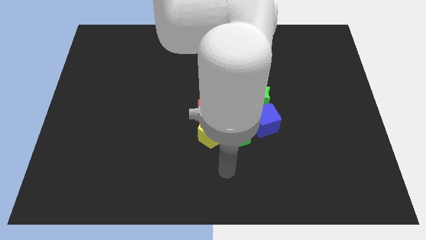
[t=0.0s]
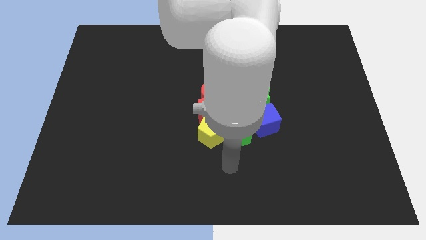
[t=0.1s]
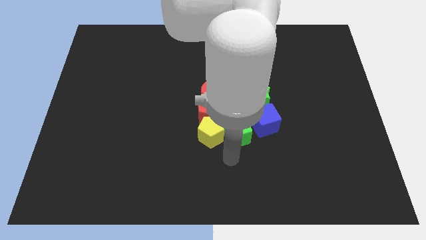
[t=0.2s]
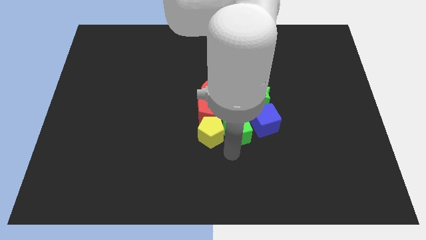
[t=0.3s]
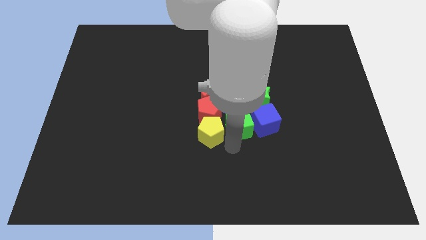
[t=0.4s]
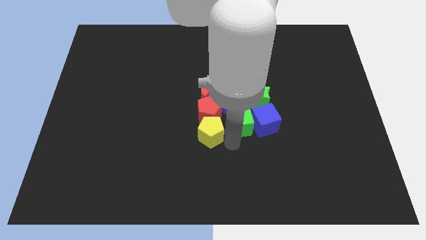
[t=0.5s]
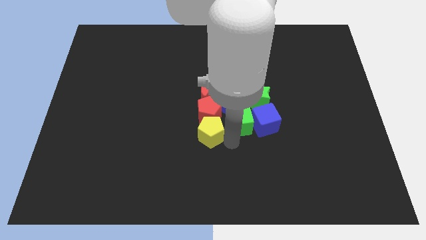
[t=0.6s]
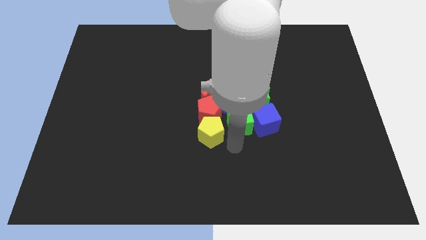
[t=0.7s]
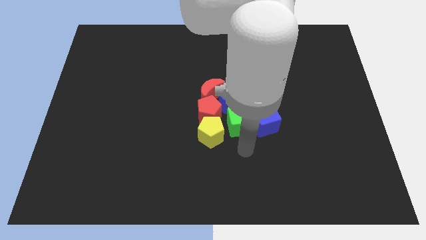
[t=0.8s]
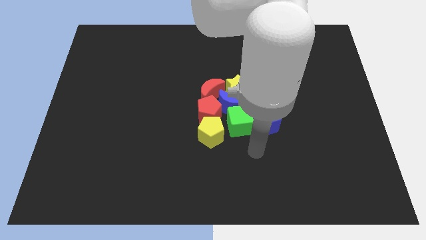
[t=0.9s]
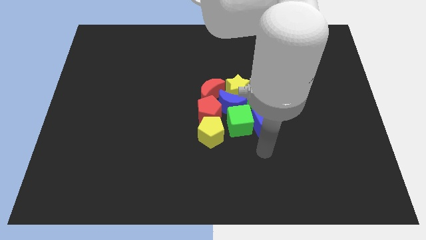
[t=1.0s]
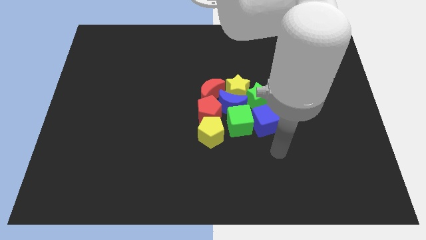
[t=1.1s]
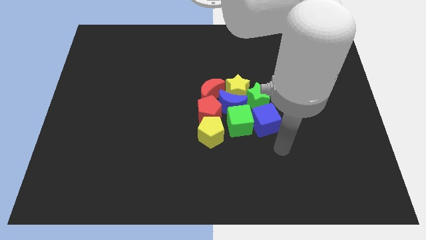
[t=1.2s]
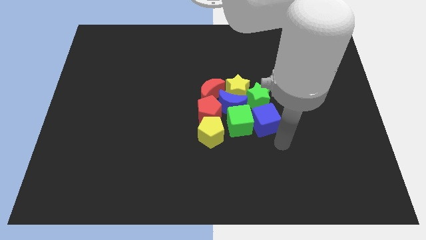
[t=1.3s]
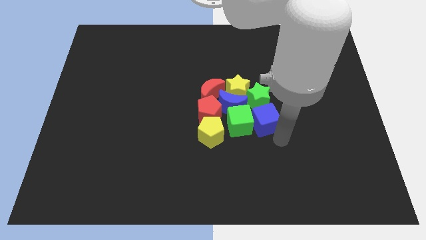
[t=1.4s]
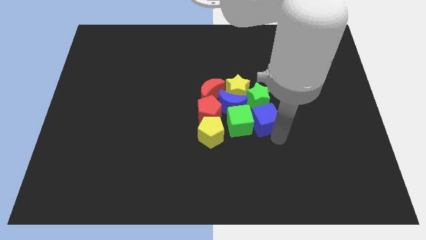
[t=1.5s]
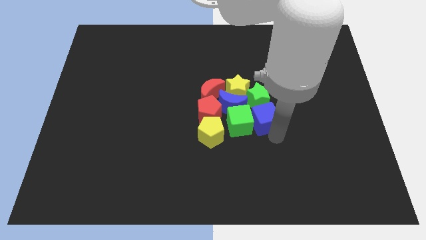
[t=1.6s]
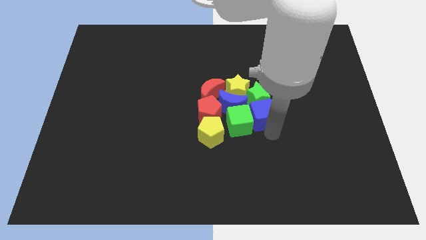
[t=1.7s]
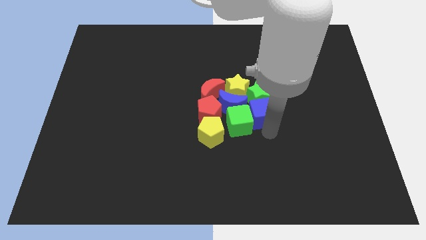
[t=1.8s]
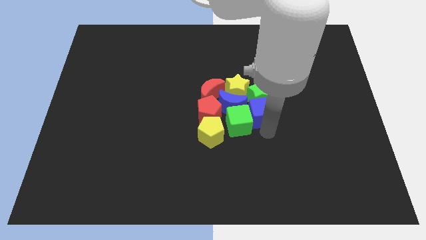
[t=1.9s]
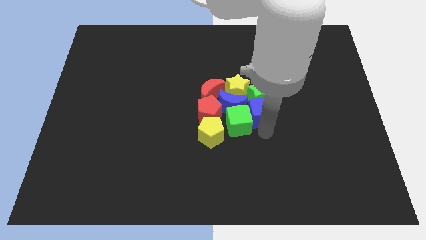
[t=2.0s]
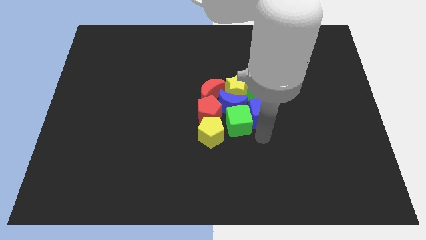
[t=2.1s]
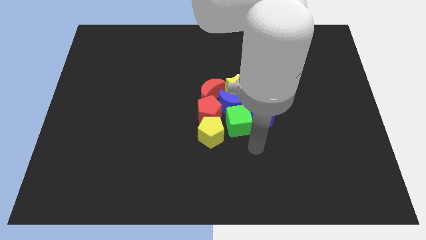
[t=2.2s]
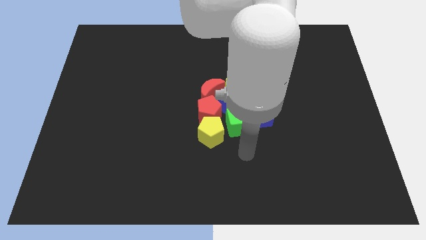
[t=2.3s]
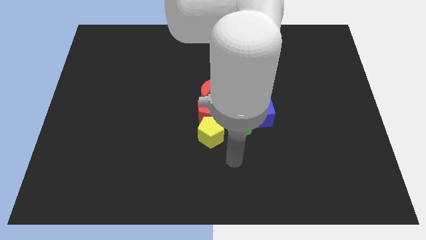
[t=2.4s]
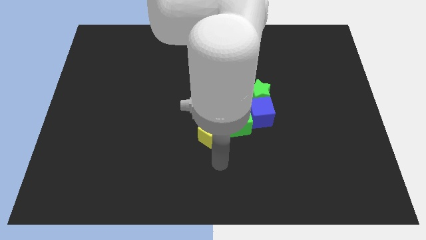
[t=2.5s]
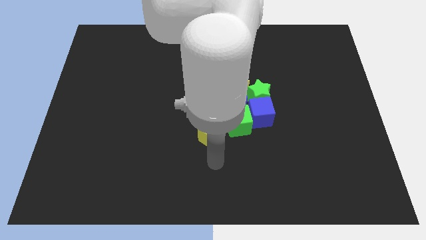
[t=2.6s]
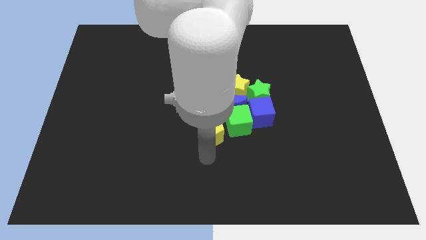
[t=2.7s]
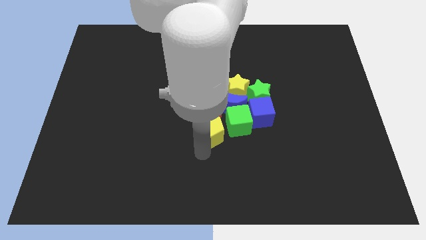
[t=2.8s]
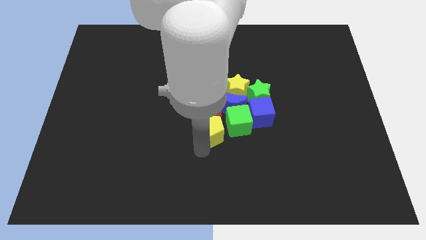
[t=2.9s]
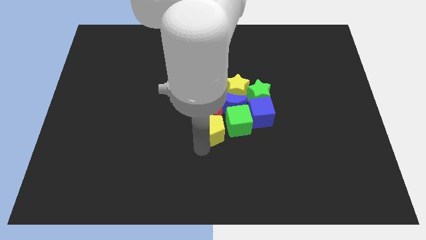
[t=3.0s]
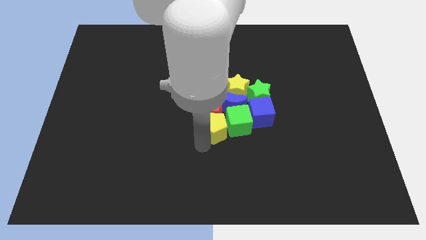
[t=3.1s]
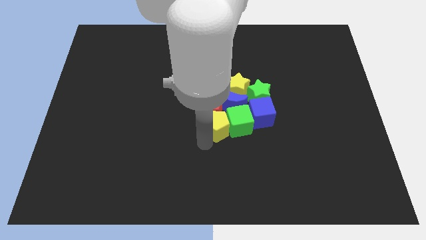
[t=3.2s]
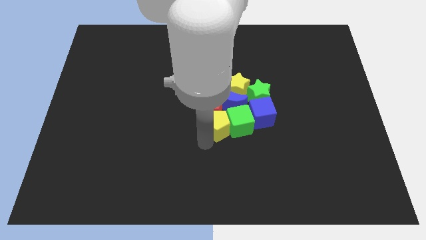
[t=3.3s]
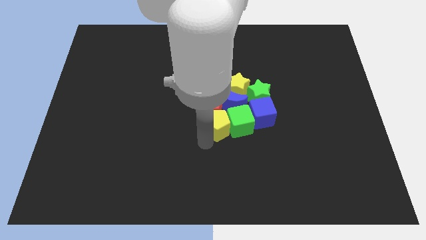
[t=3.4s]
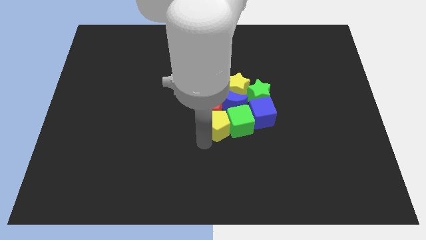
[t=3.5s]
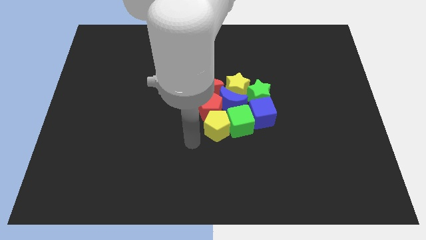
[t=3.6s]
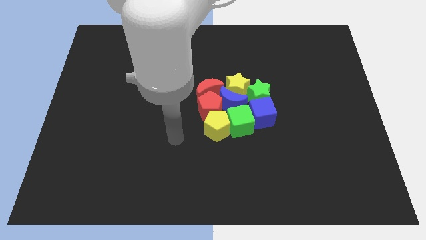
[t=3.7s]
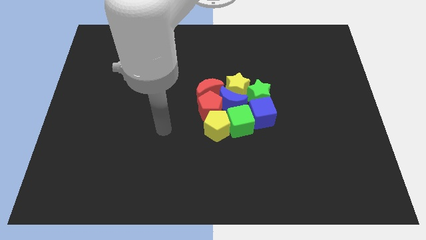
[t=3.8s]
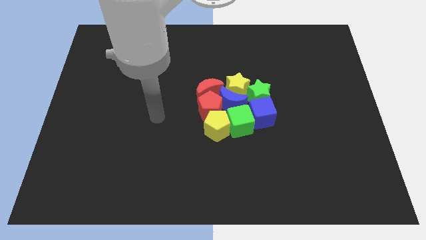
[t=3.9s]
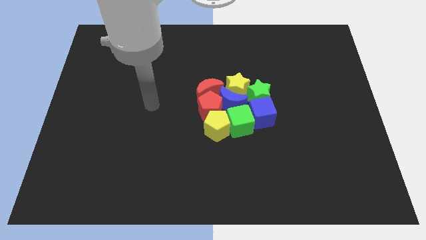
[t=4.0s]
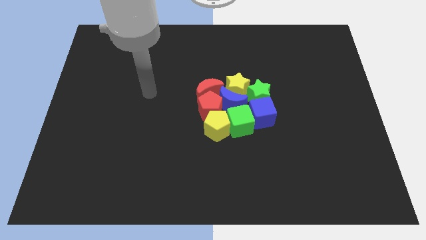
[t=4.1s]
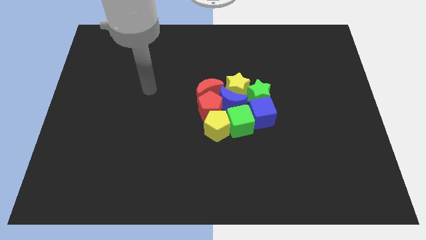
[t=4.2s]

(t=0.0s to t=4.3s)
put all the blocks on a center of the board

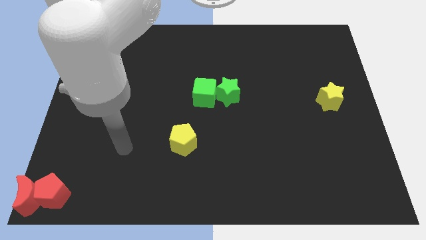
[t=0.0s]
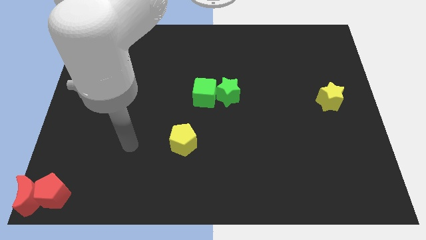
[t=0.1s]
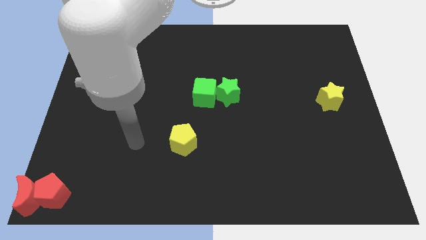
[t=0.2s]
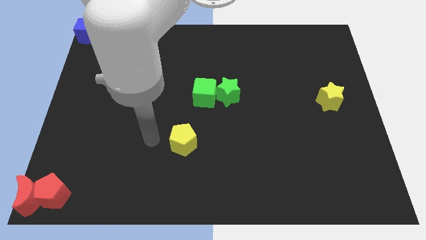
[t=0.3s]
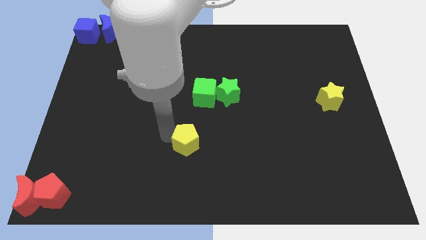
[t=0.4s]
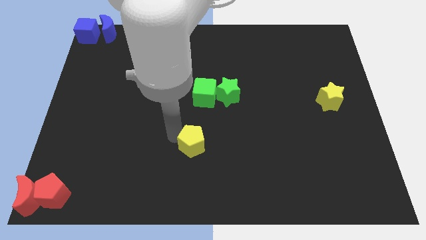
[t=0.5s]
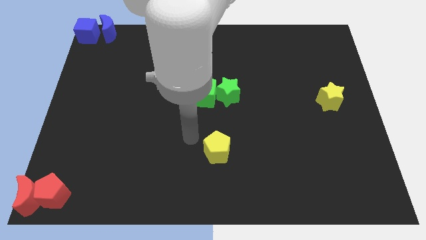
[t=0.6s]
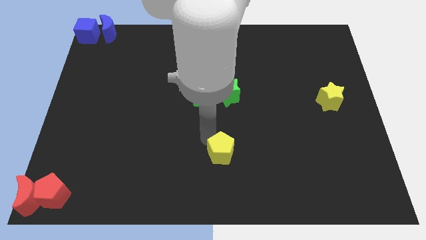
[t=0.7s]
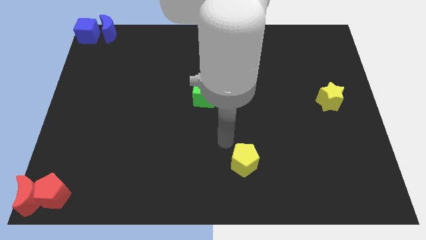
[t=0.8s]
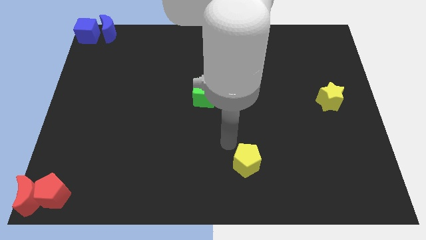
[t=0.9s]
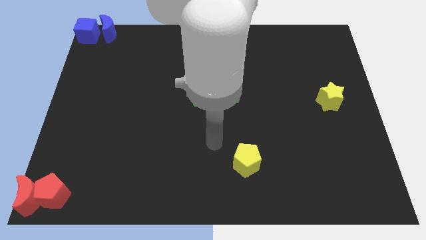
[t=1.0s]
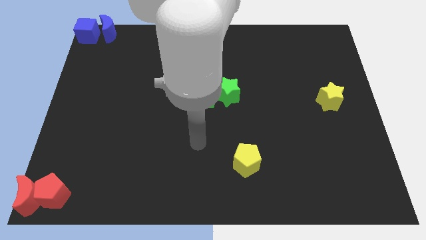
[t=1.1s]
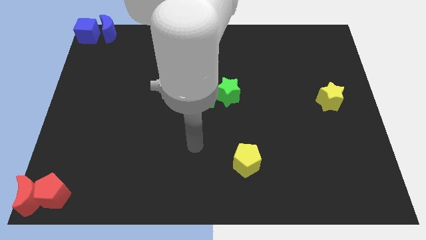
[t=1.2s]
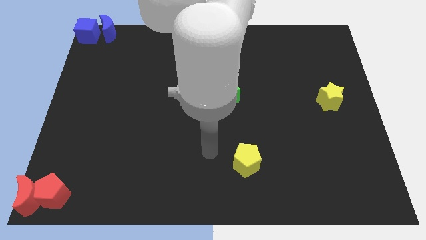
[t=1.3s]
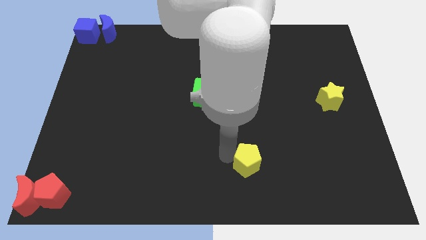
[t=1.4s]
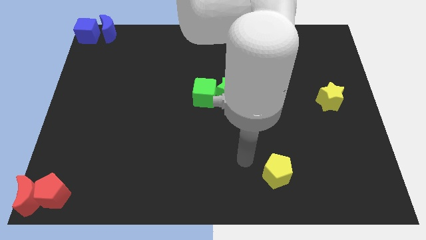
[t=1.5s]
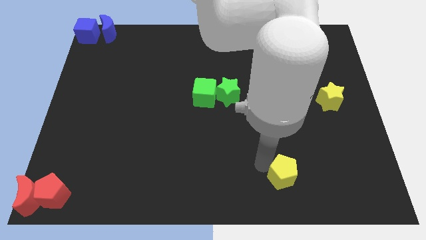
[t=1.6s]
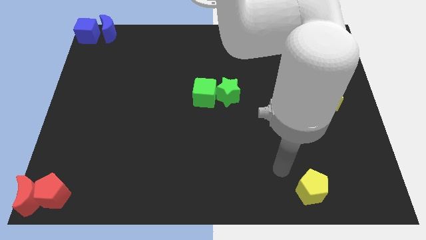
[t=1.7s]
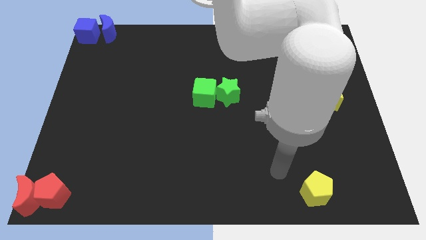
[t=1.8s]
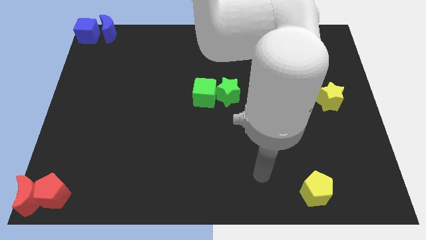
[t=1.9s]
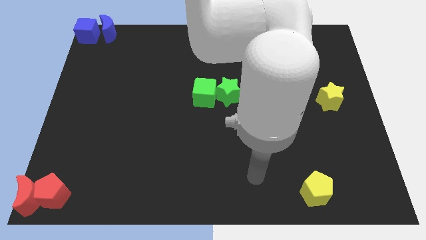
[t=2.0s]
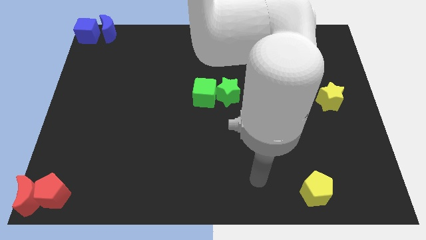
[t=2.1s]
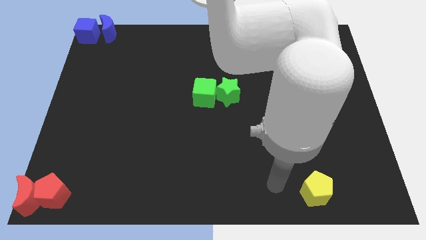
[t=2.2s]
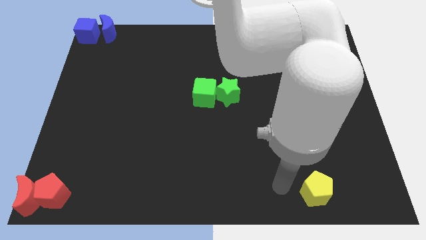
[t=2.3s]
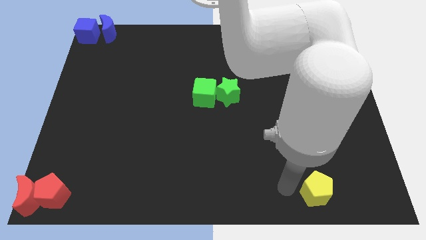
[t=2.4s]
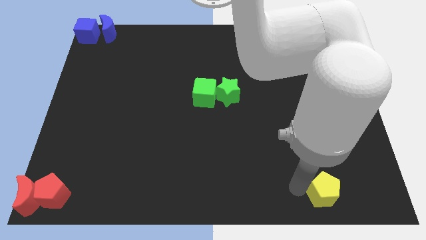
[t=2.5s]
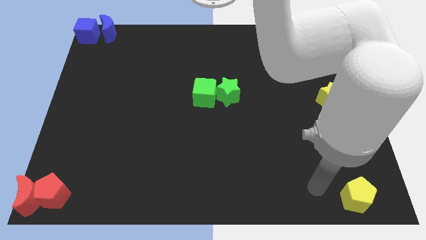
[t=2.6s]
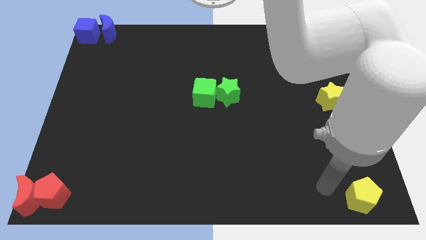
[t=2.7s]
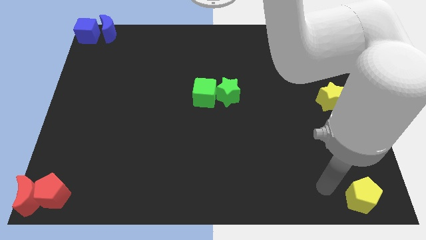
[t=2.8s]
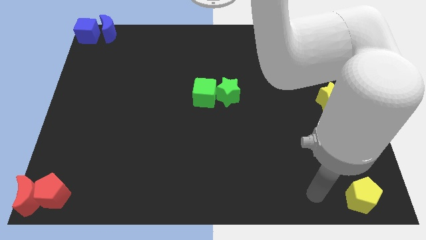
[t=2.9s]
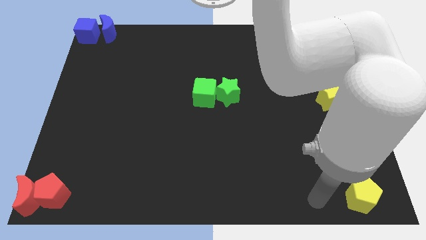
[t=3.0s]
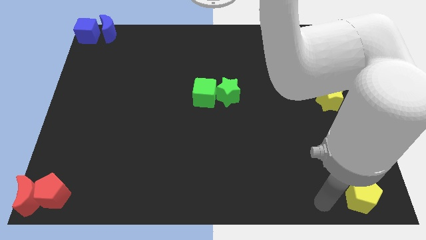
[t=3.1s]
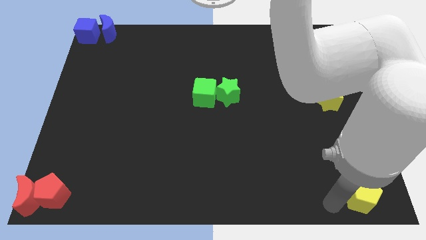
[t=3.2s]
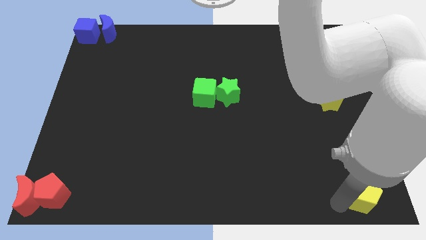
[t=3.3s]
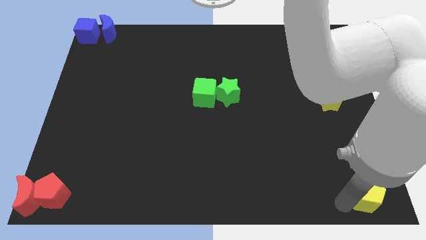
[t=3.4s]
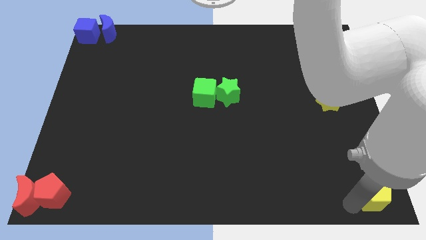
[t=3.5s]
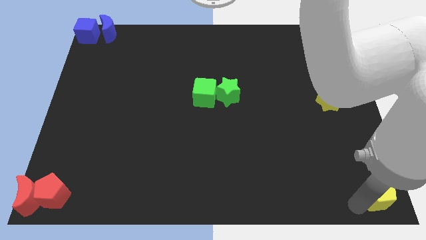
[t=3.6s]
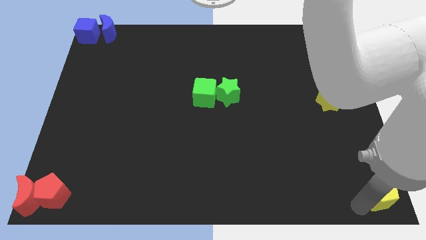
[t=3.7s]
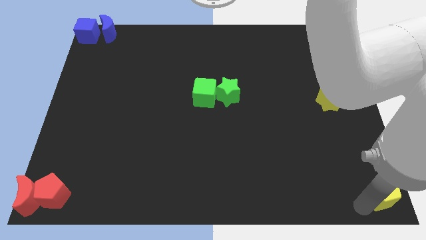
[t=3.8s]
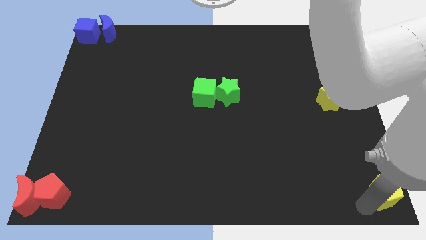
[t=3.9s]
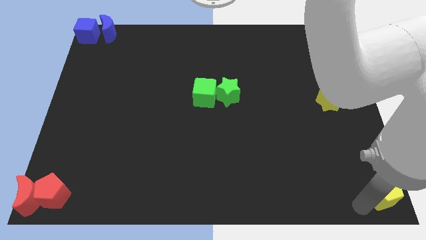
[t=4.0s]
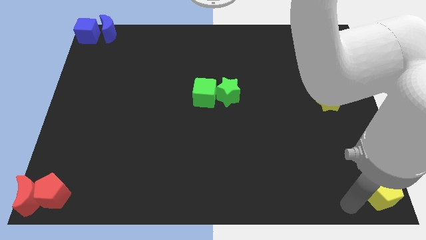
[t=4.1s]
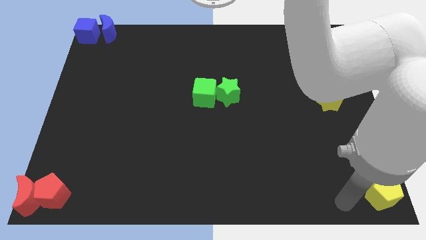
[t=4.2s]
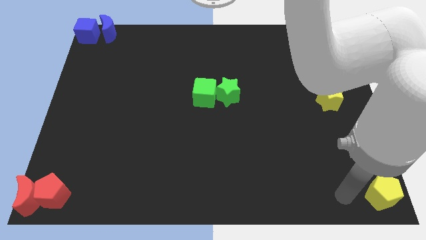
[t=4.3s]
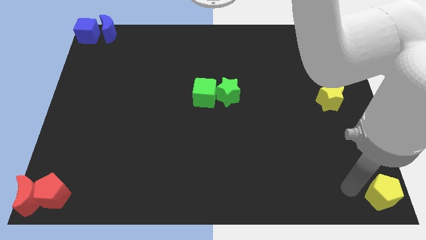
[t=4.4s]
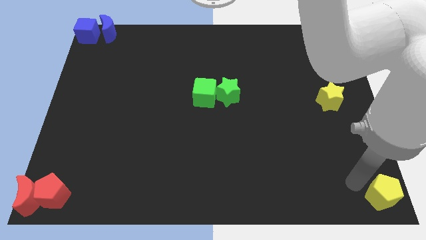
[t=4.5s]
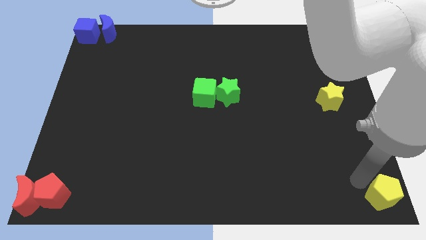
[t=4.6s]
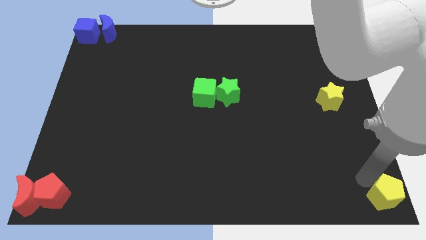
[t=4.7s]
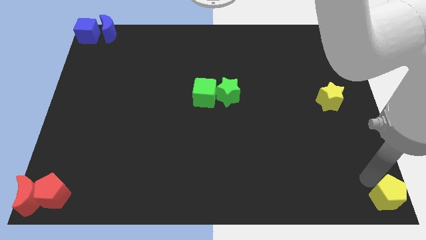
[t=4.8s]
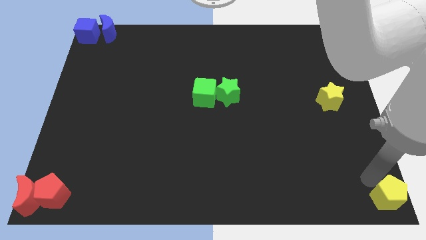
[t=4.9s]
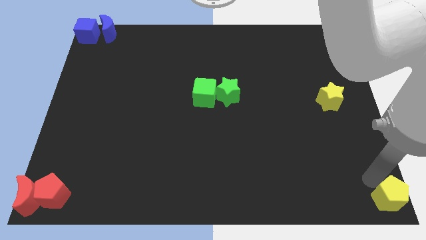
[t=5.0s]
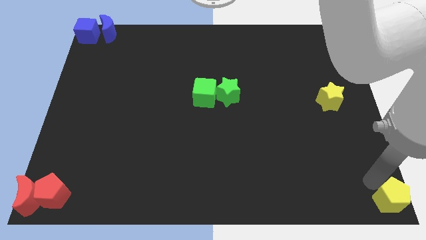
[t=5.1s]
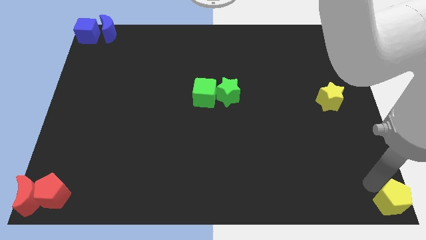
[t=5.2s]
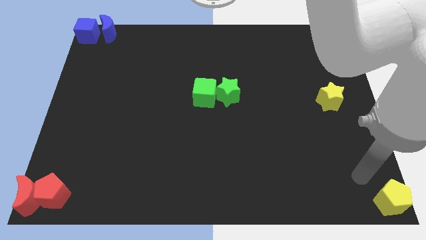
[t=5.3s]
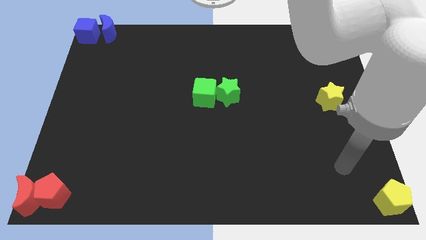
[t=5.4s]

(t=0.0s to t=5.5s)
move the yellow pentagon to the bottom right corner
